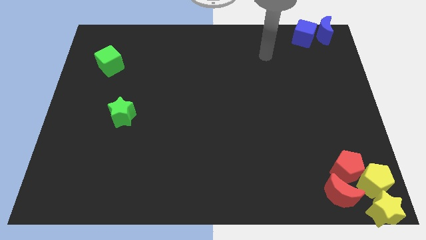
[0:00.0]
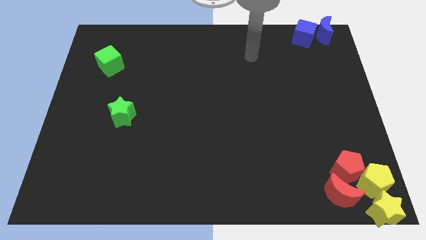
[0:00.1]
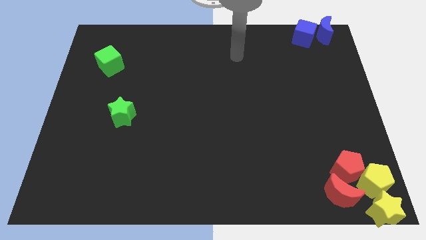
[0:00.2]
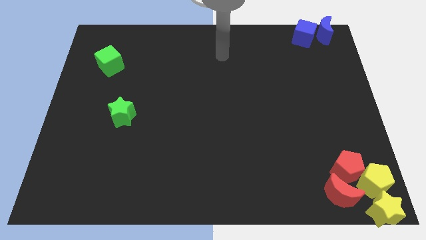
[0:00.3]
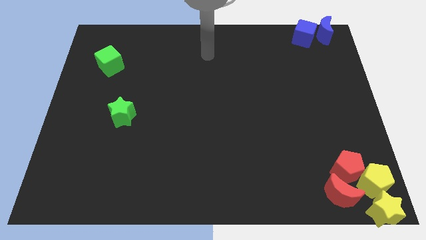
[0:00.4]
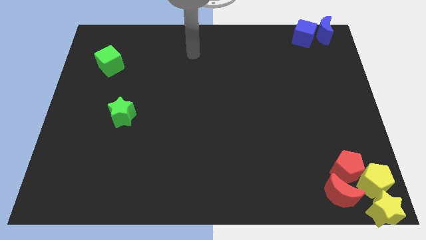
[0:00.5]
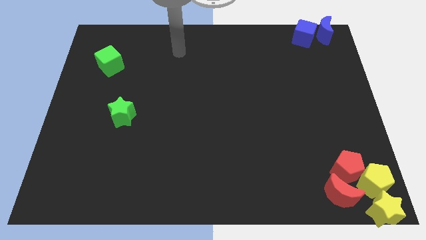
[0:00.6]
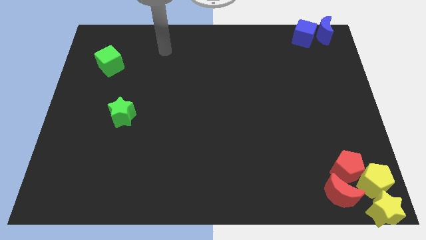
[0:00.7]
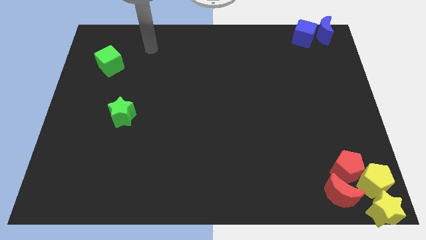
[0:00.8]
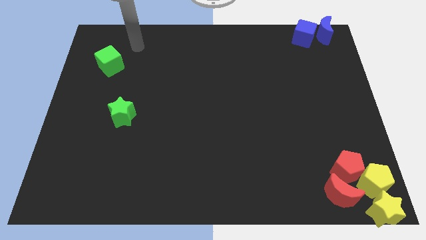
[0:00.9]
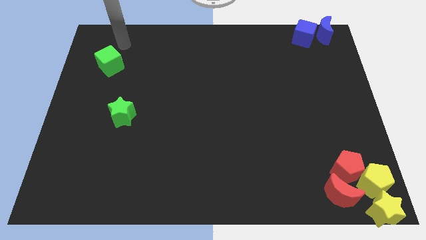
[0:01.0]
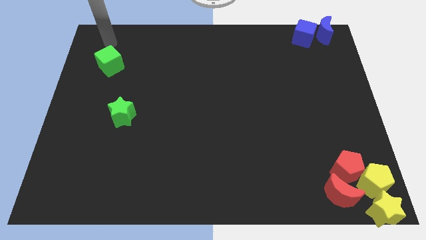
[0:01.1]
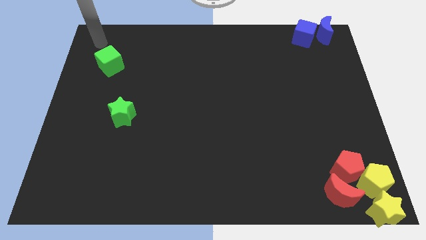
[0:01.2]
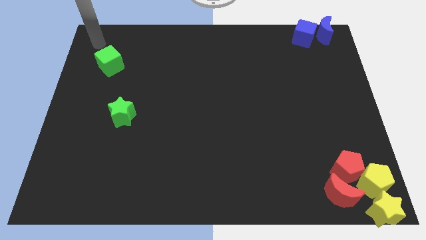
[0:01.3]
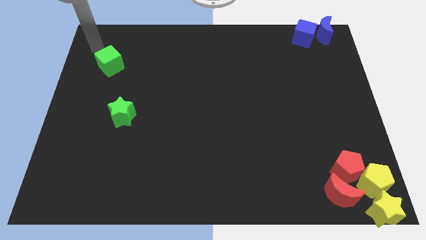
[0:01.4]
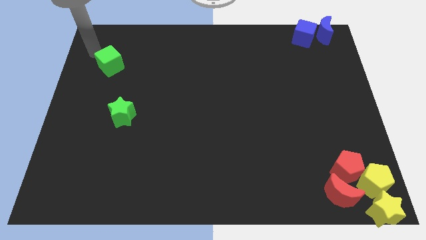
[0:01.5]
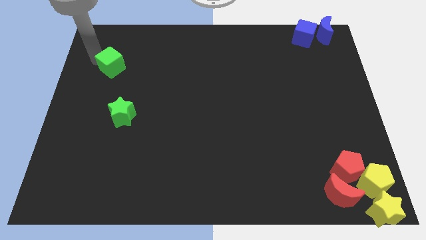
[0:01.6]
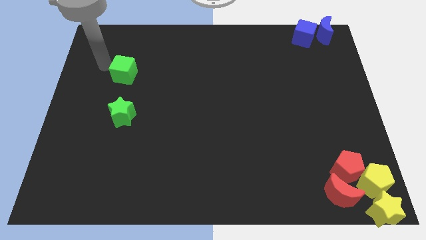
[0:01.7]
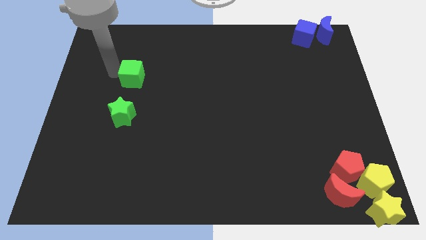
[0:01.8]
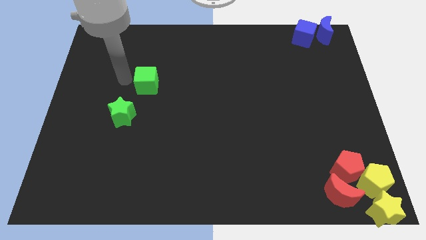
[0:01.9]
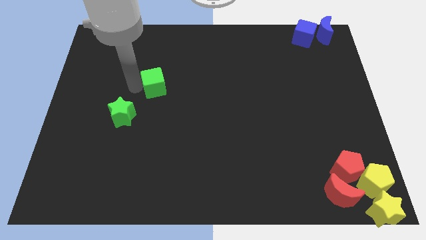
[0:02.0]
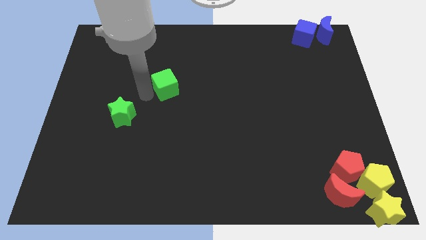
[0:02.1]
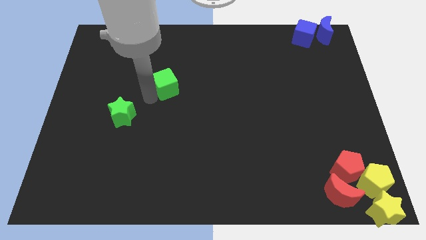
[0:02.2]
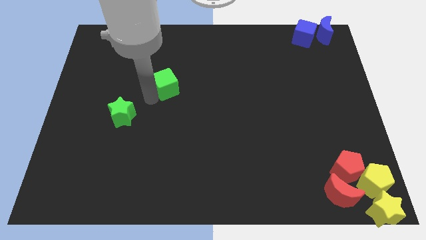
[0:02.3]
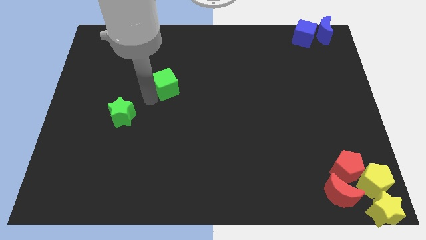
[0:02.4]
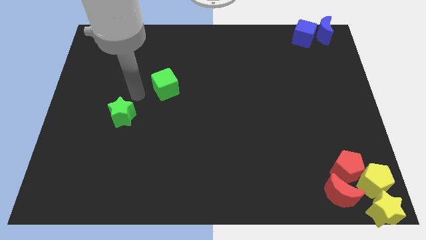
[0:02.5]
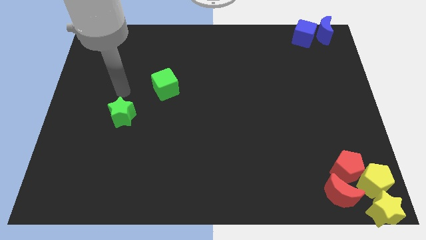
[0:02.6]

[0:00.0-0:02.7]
place the green cube diagonally top right to the green star

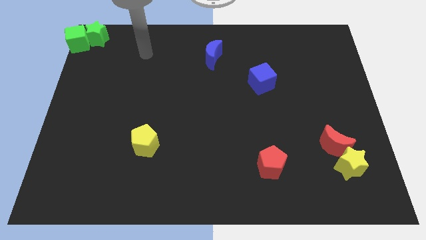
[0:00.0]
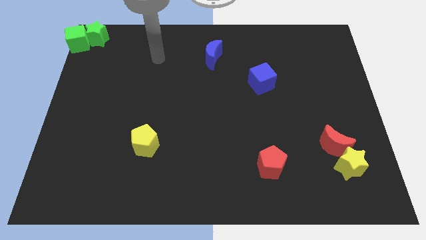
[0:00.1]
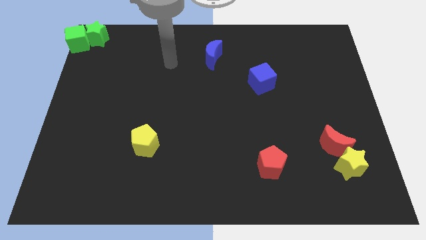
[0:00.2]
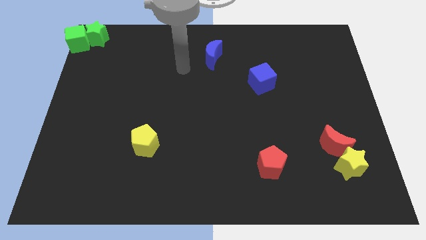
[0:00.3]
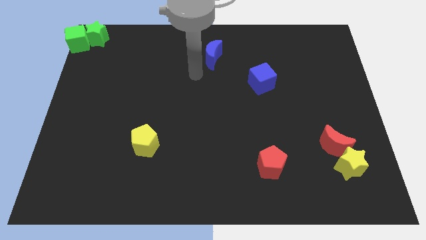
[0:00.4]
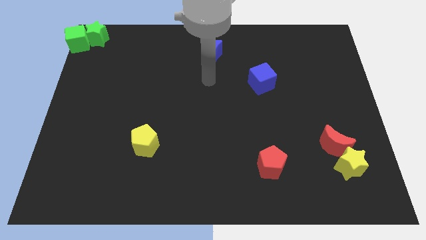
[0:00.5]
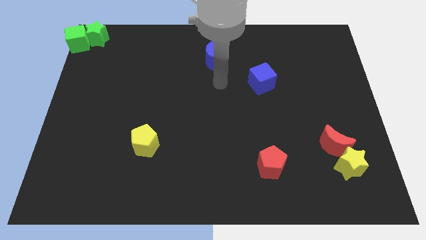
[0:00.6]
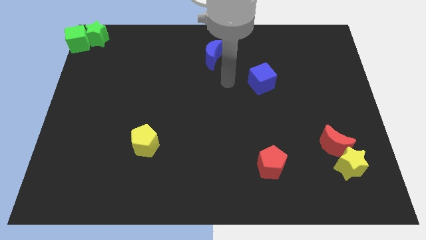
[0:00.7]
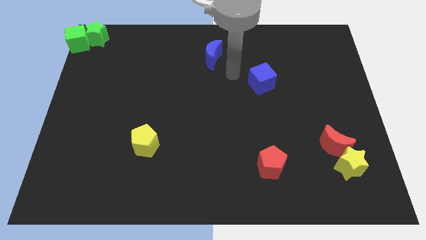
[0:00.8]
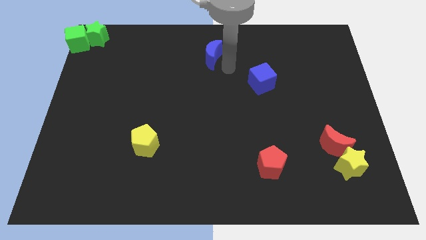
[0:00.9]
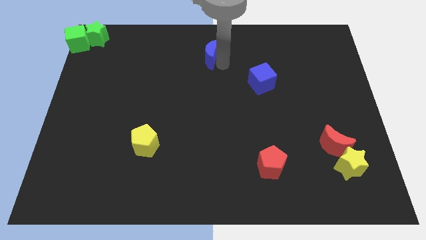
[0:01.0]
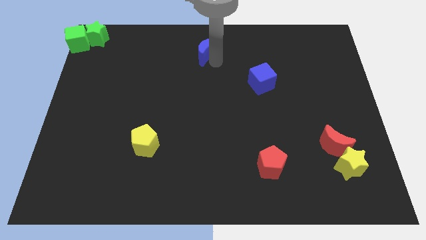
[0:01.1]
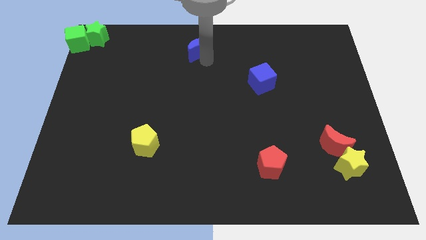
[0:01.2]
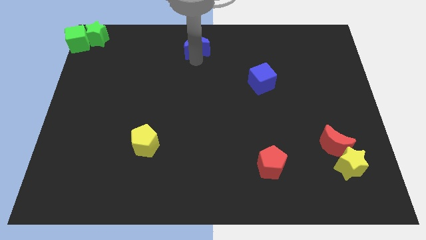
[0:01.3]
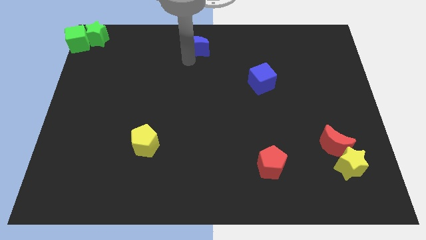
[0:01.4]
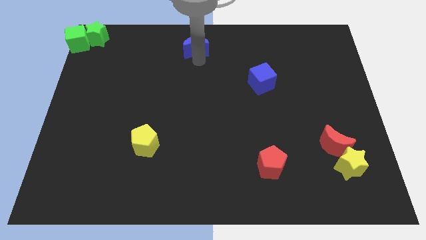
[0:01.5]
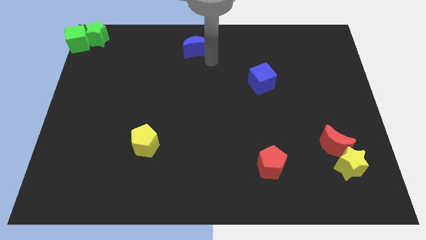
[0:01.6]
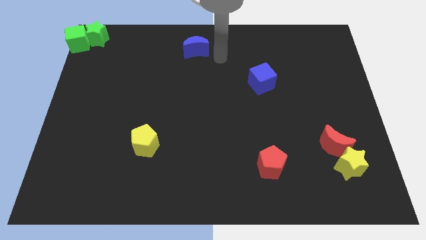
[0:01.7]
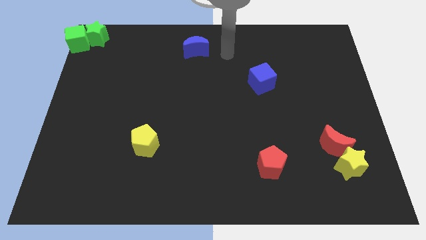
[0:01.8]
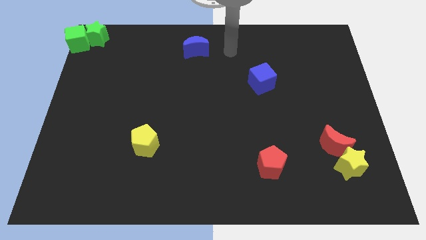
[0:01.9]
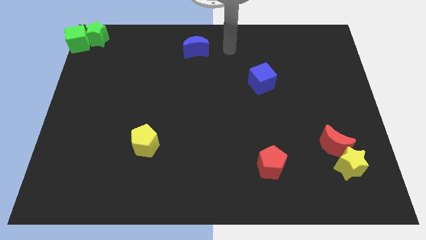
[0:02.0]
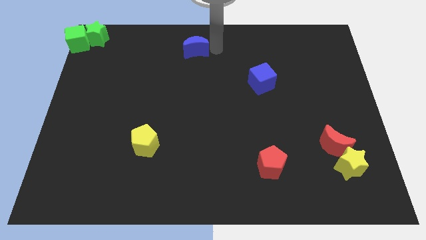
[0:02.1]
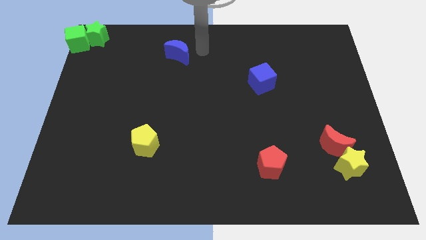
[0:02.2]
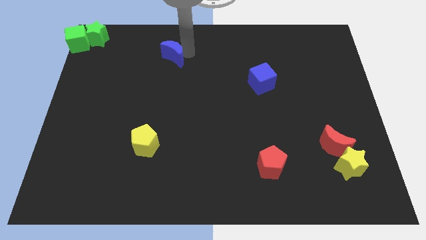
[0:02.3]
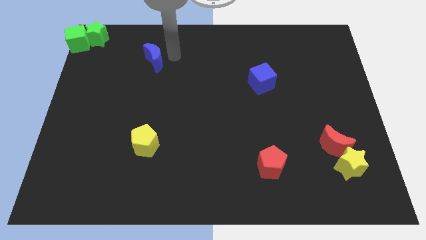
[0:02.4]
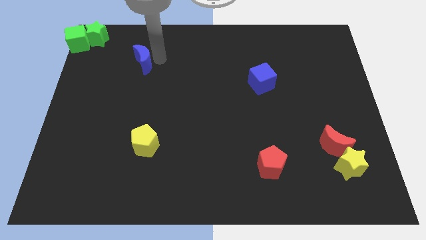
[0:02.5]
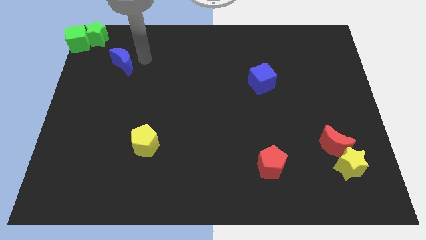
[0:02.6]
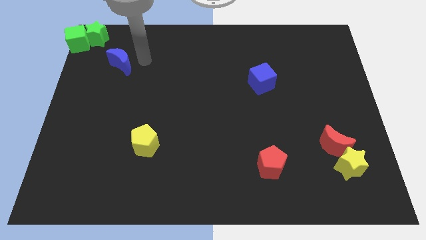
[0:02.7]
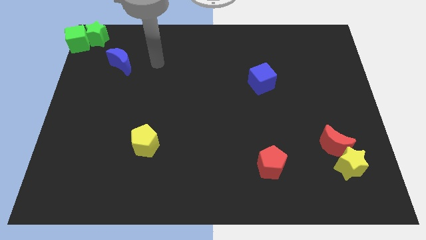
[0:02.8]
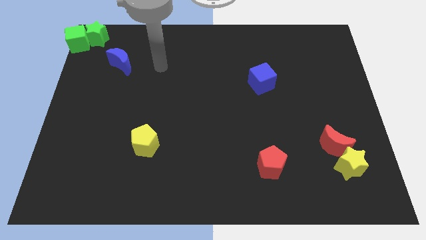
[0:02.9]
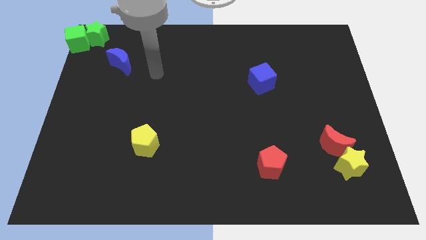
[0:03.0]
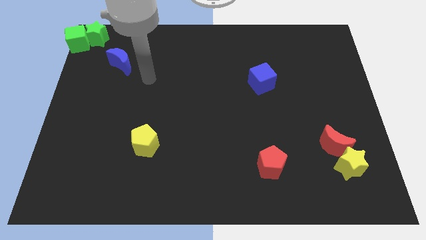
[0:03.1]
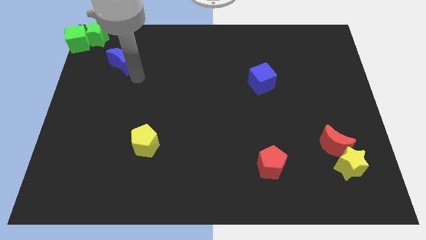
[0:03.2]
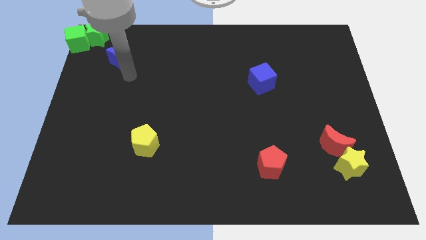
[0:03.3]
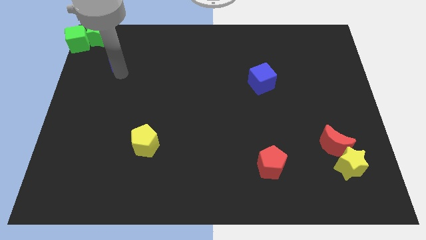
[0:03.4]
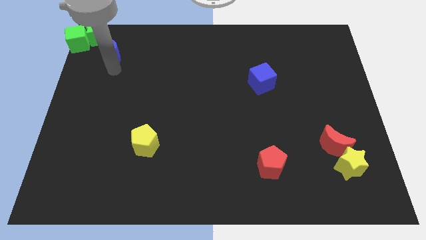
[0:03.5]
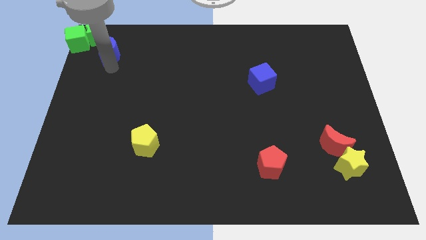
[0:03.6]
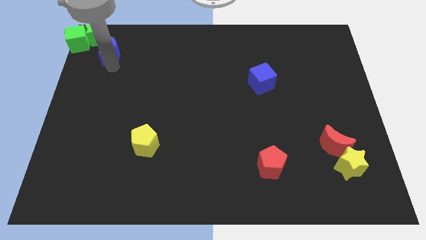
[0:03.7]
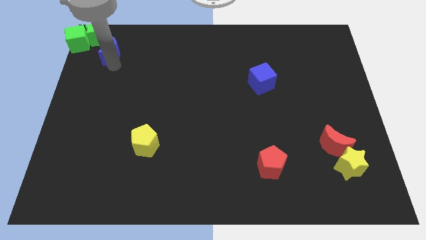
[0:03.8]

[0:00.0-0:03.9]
slide the blue crescent to the bottom right side of the greens star

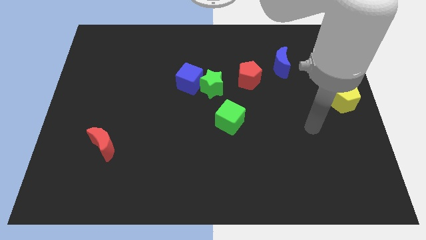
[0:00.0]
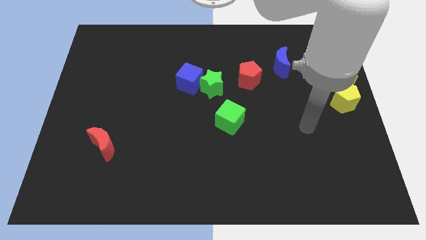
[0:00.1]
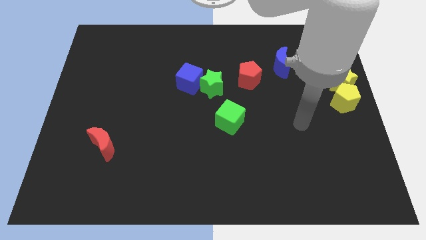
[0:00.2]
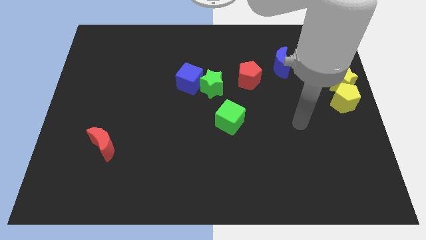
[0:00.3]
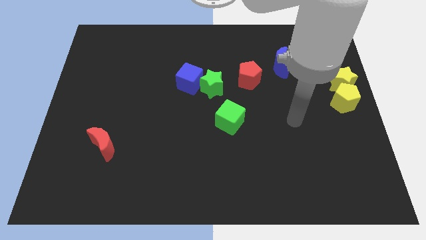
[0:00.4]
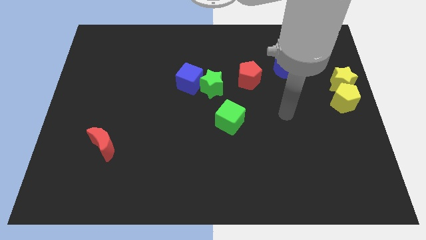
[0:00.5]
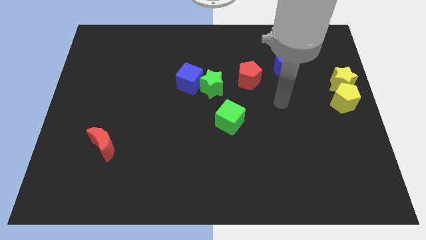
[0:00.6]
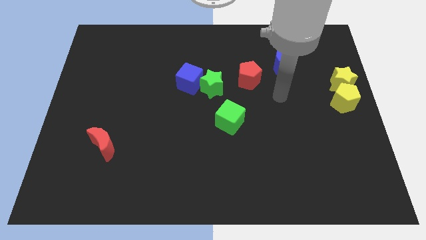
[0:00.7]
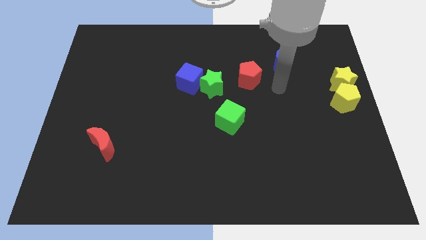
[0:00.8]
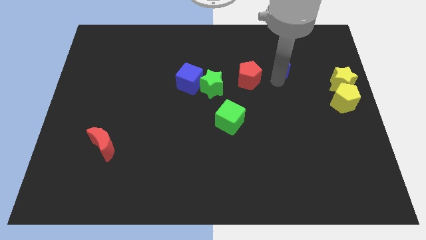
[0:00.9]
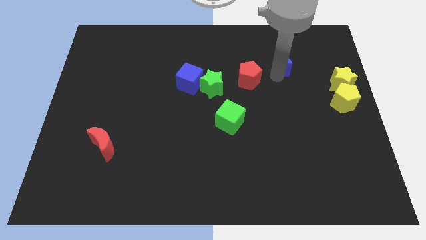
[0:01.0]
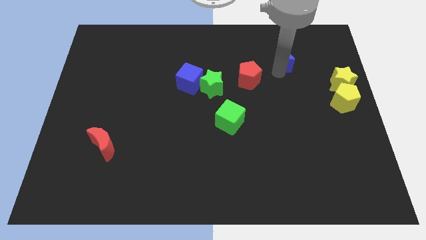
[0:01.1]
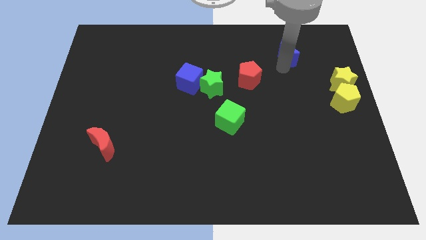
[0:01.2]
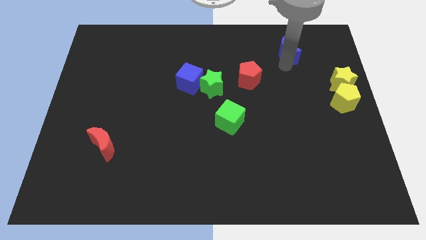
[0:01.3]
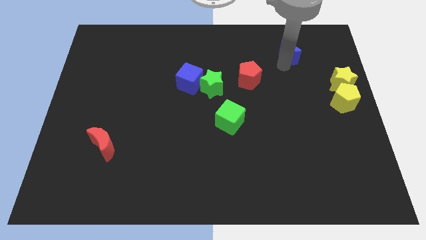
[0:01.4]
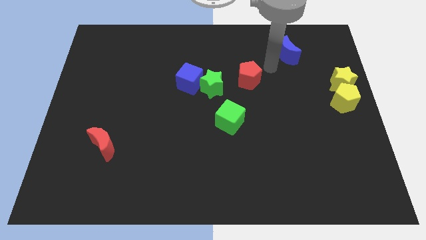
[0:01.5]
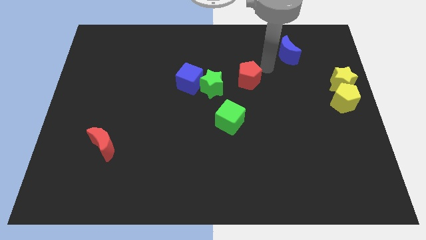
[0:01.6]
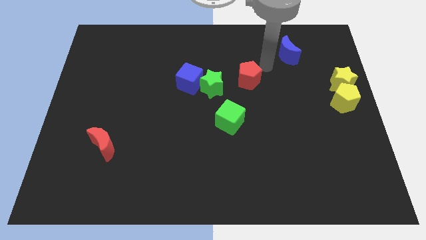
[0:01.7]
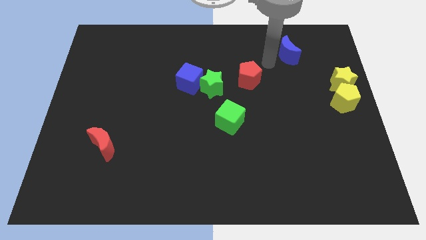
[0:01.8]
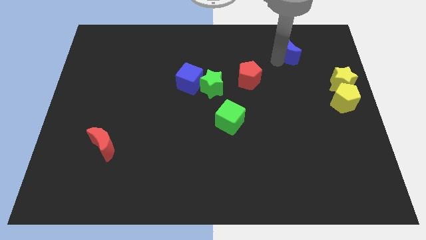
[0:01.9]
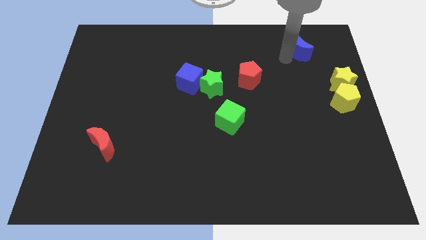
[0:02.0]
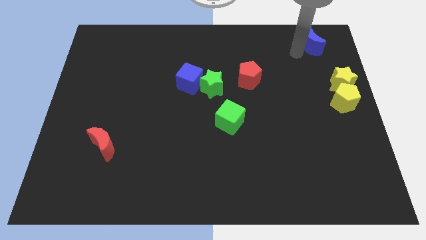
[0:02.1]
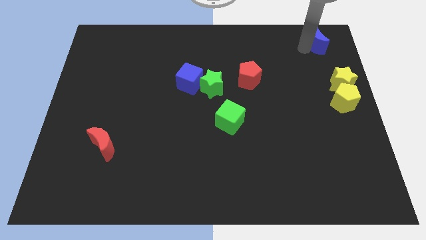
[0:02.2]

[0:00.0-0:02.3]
move the blue crescent to the top left of the yellow star
